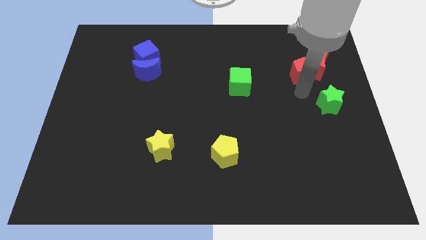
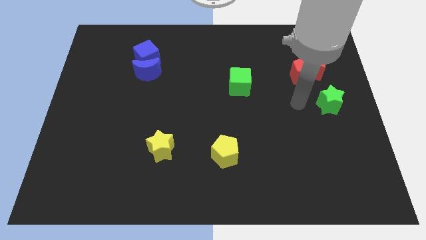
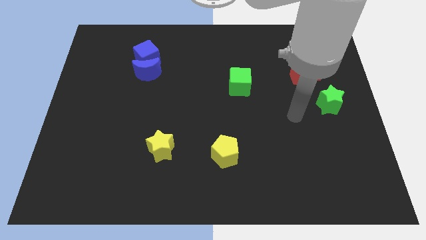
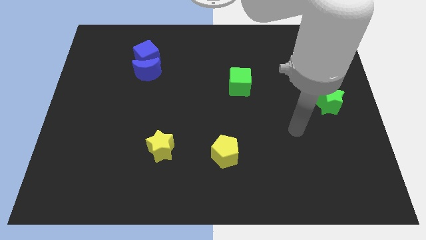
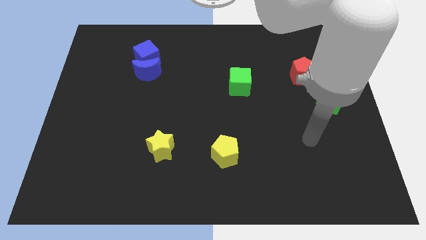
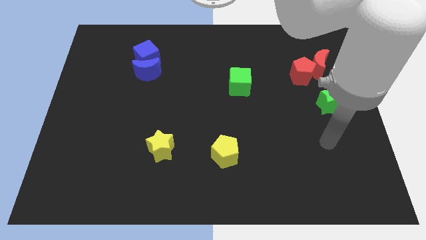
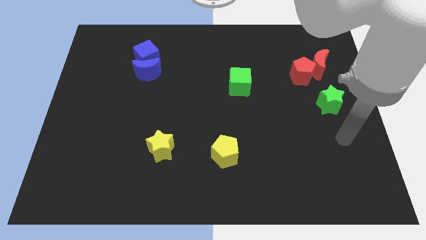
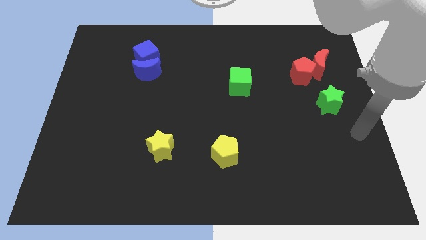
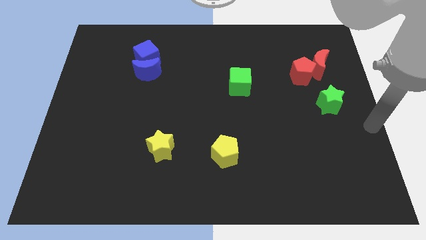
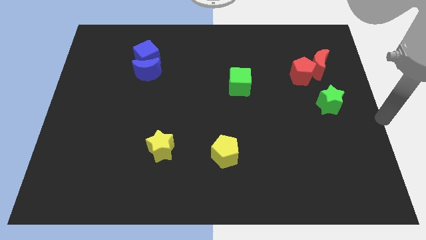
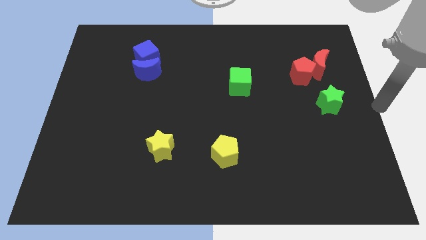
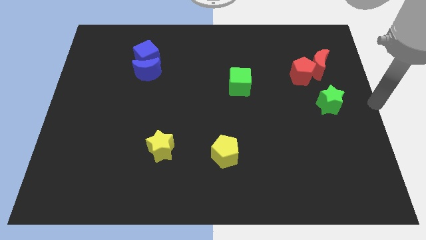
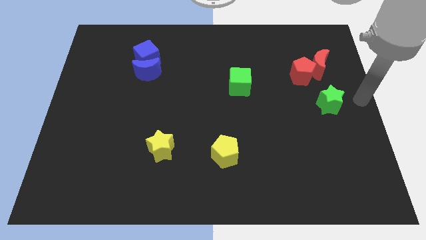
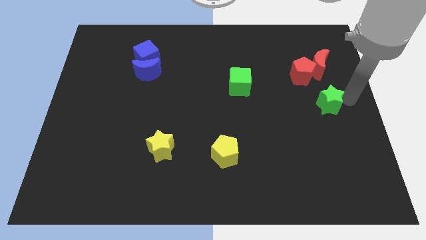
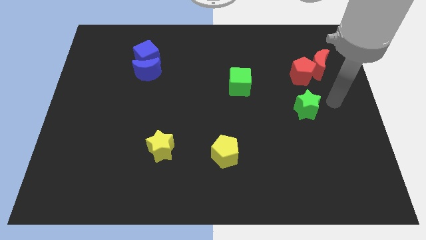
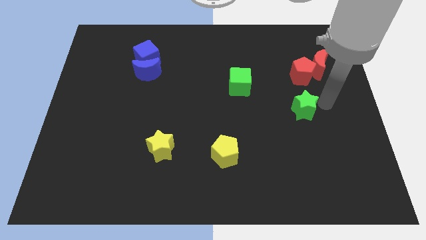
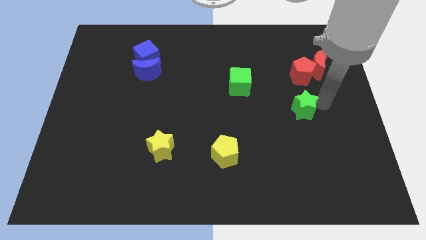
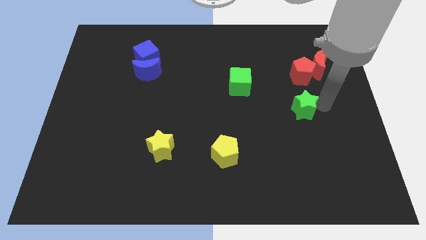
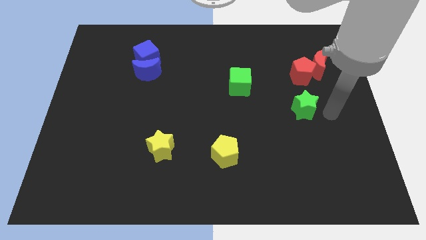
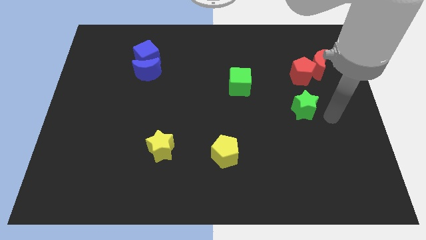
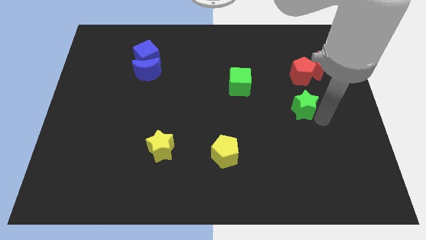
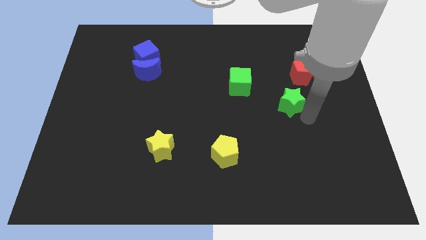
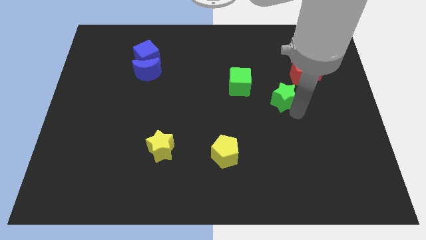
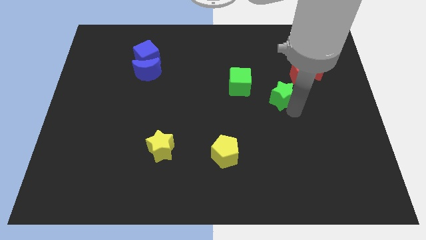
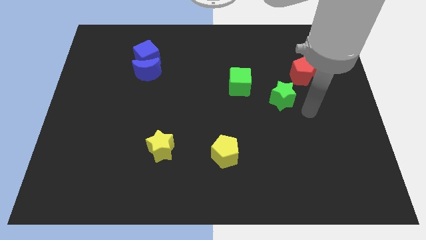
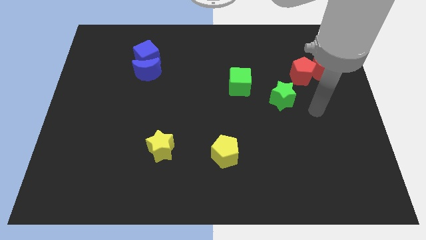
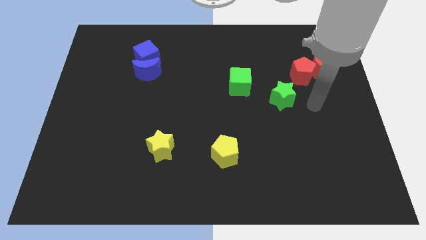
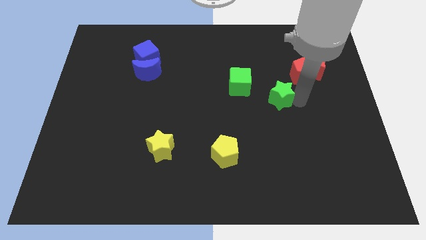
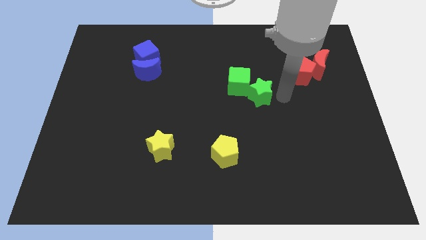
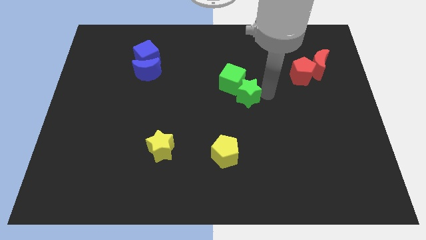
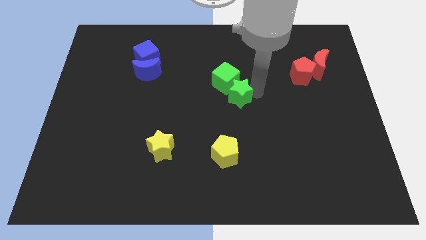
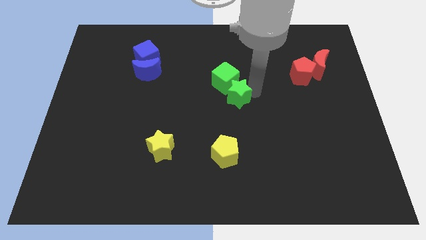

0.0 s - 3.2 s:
place the green star above the yellow pentagon

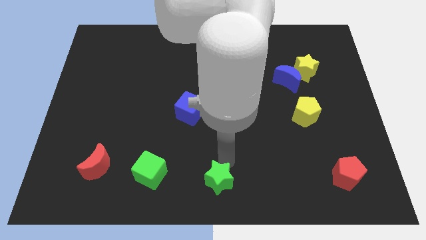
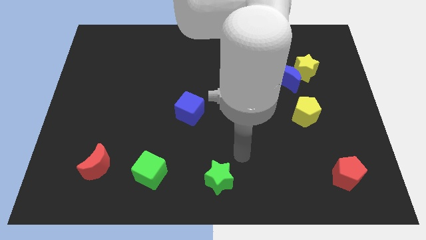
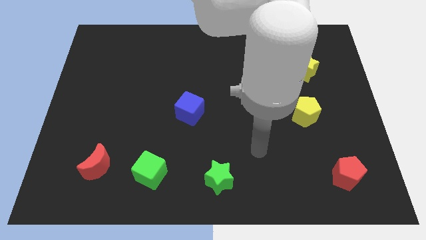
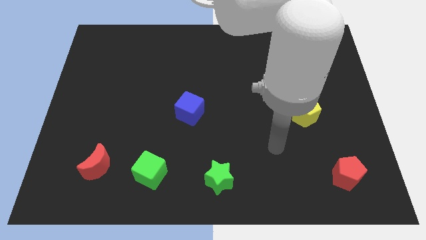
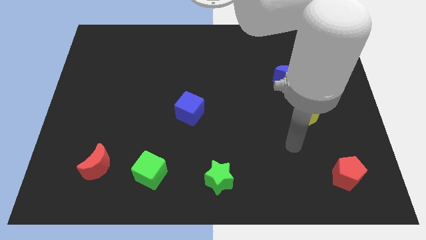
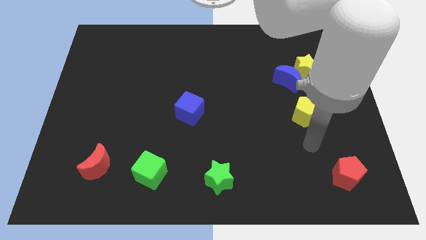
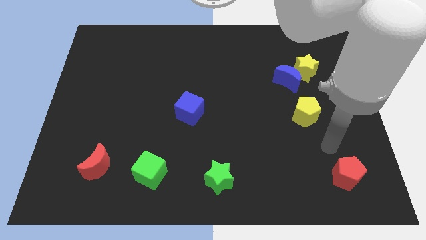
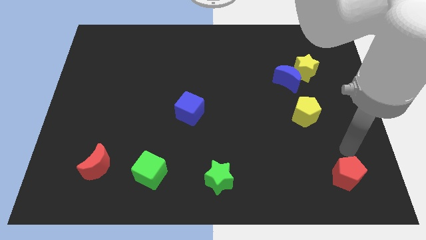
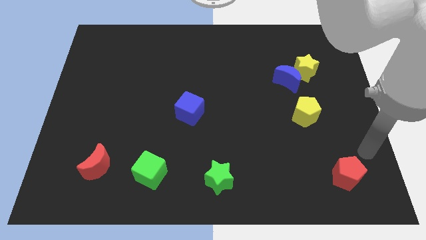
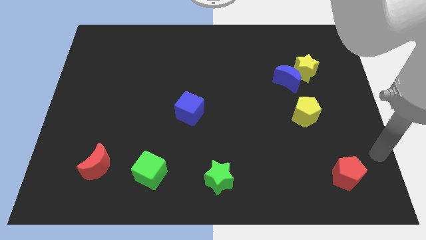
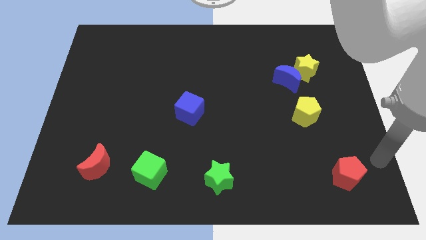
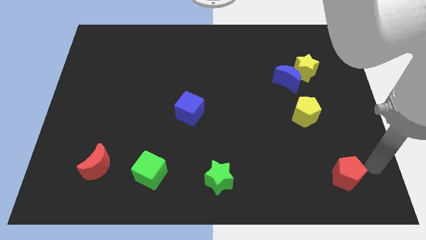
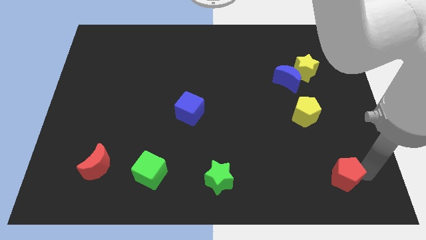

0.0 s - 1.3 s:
move your elbow towards the red pentagon

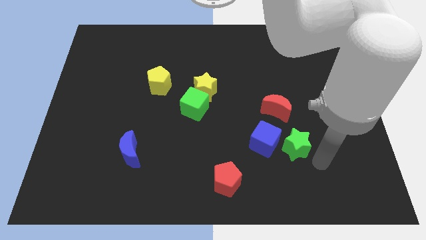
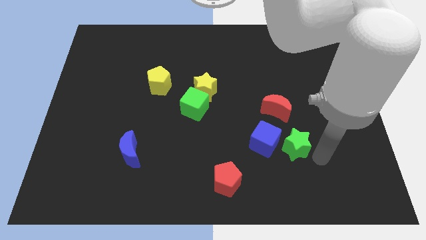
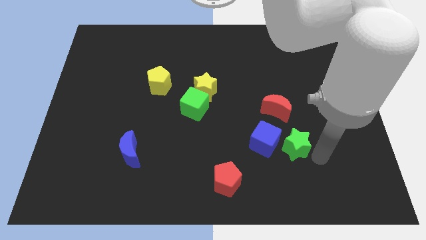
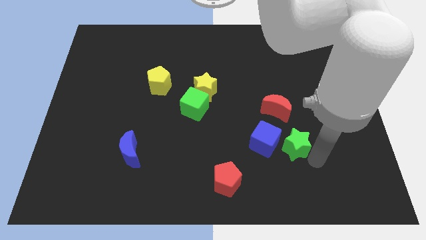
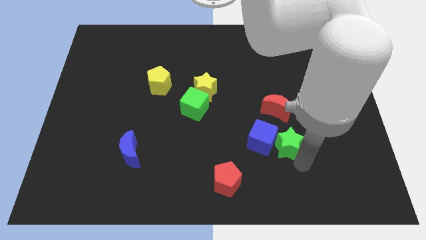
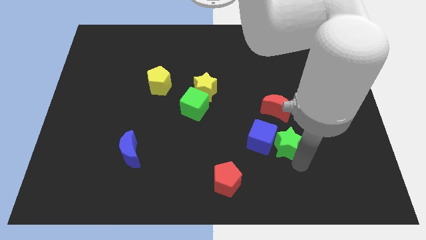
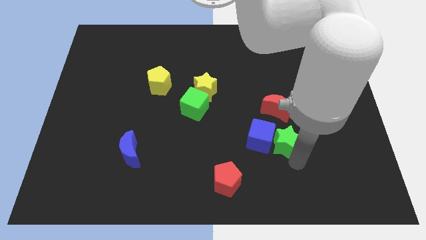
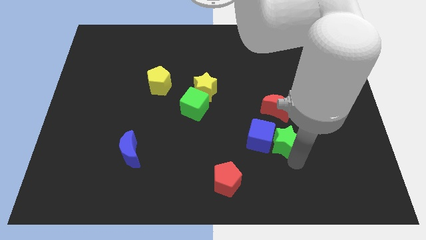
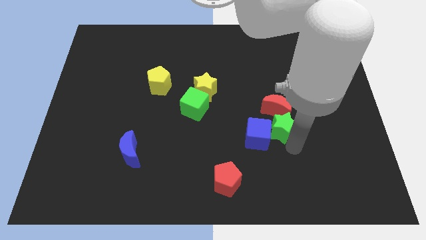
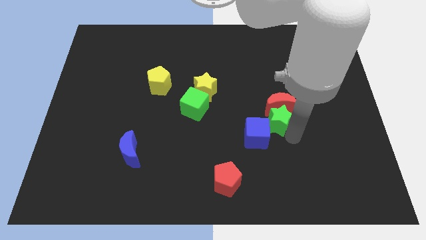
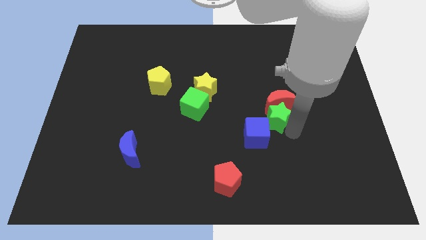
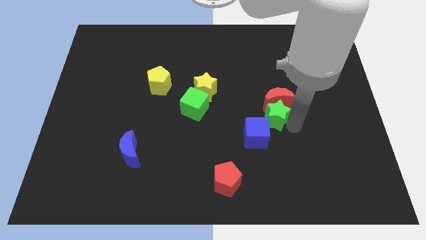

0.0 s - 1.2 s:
place the green star in between blue cube and red block

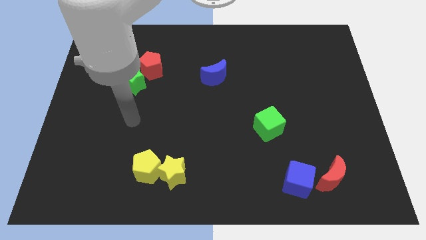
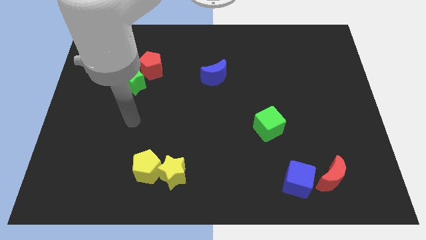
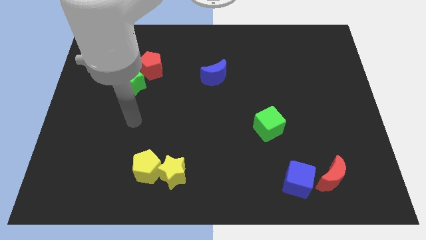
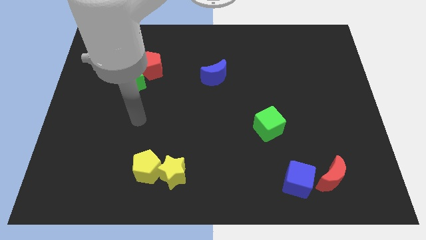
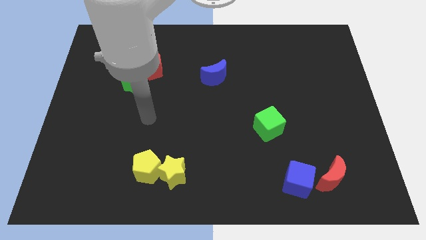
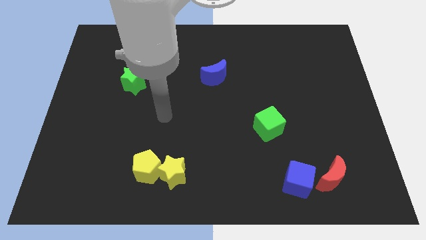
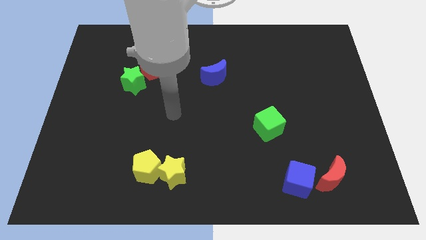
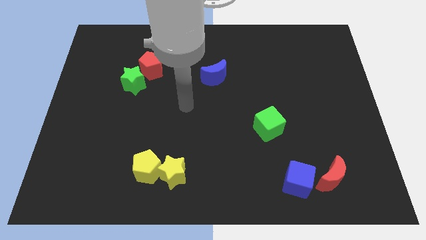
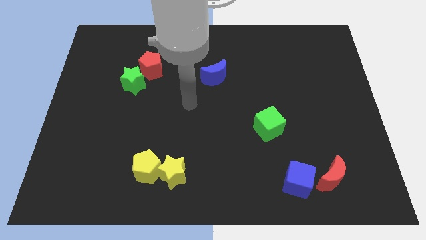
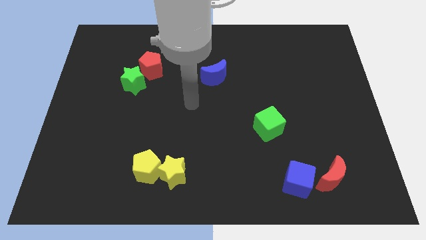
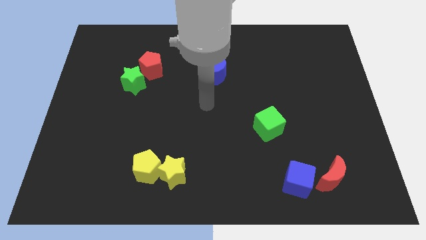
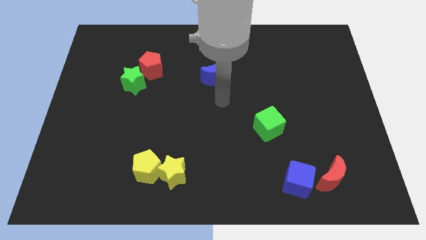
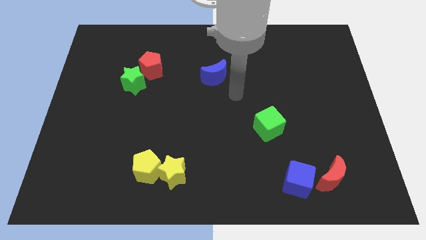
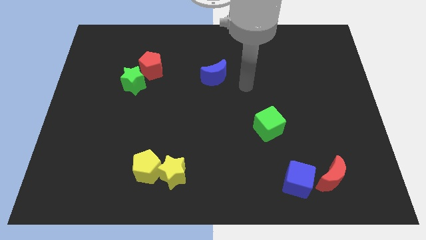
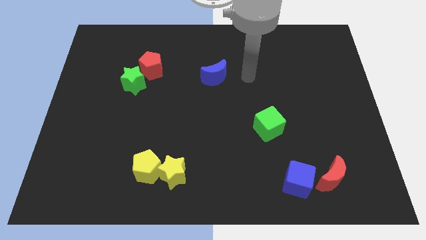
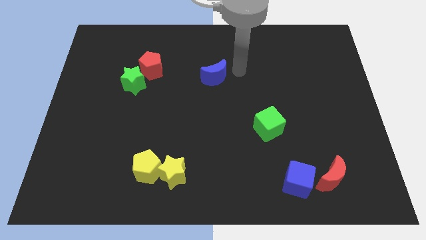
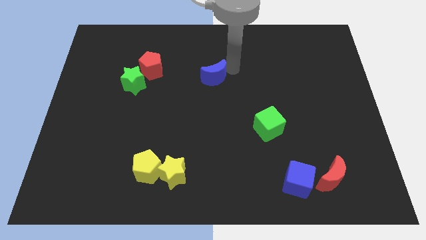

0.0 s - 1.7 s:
place your hand to the right of the blue moon

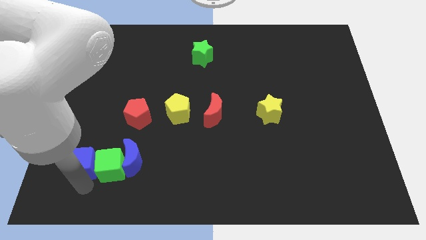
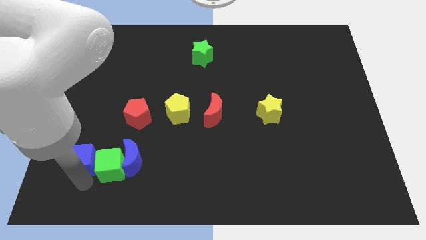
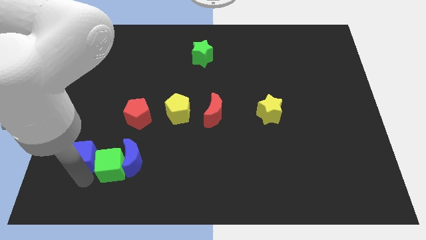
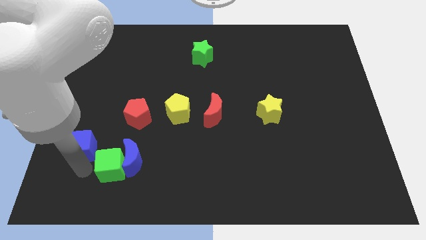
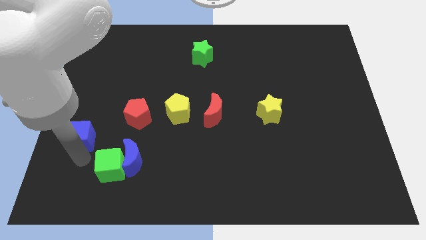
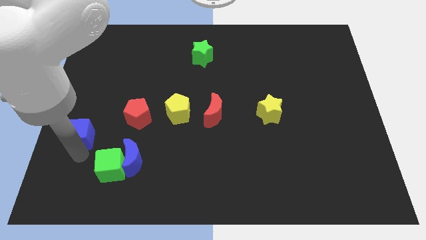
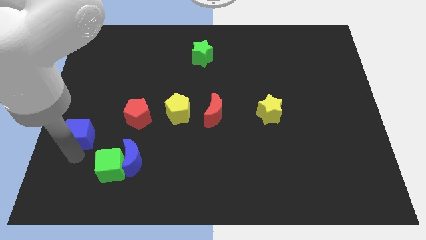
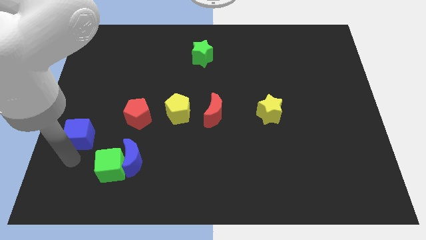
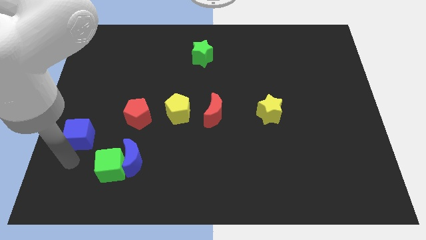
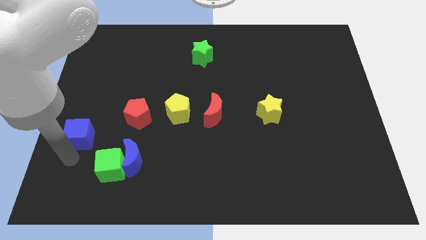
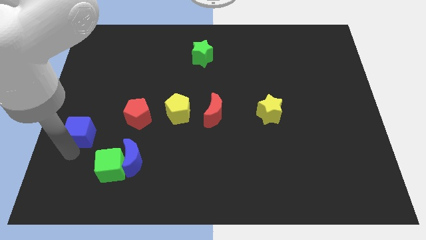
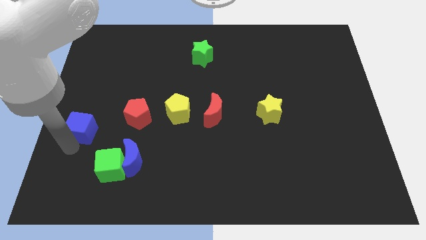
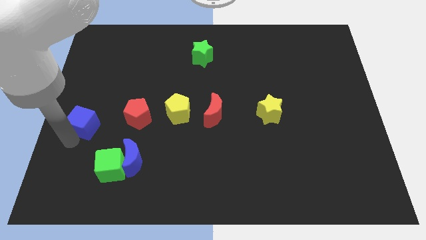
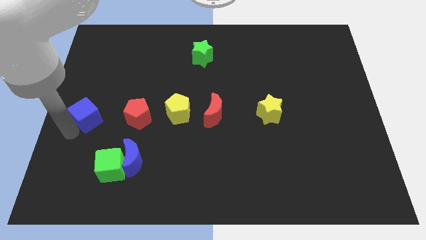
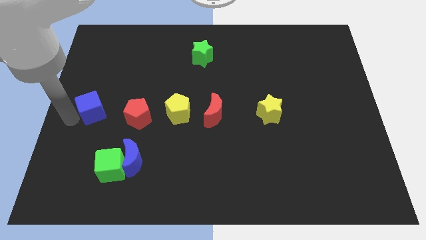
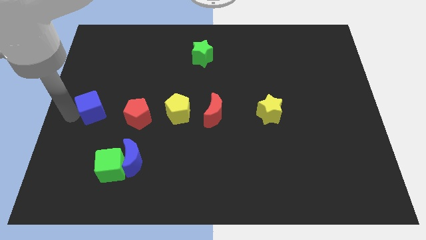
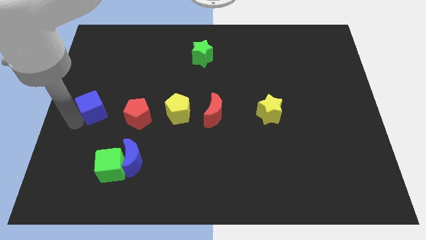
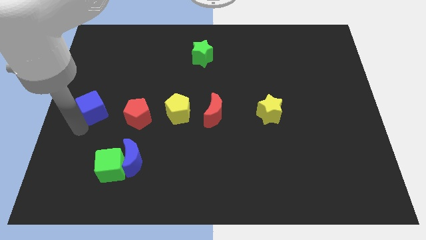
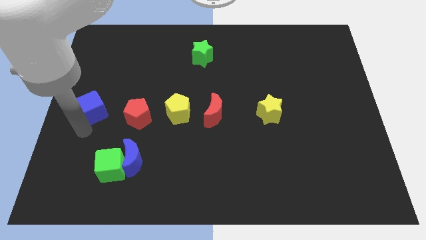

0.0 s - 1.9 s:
put the blue cube to the left of the red pentagon
